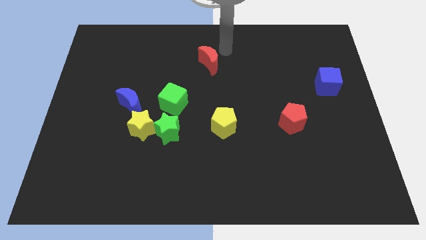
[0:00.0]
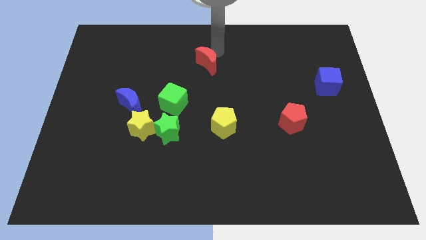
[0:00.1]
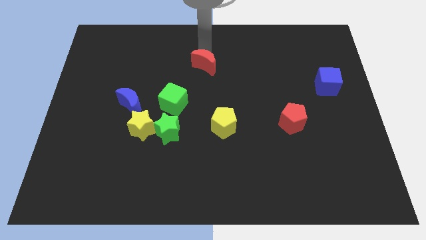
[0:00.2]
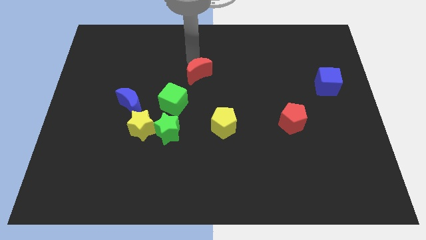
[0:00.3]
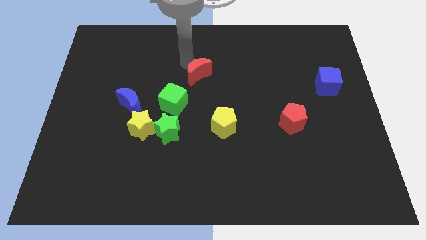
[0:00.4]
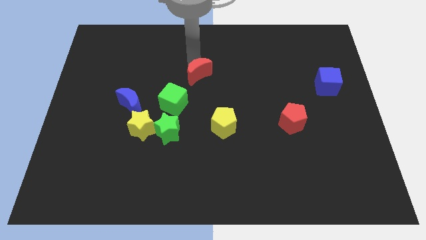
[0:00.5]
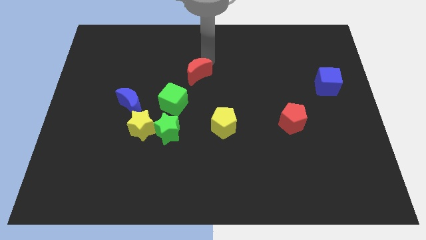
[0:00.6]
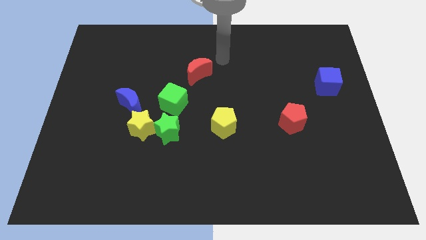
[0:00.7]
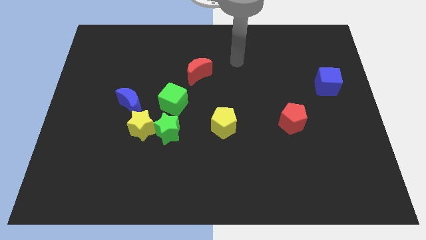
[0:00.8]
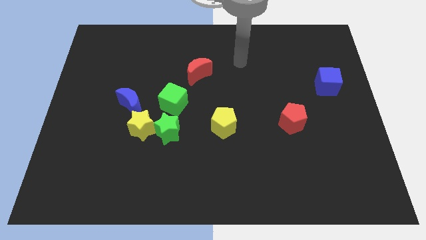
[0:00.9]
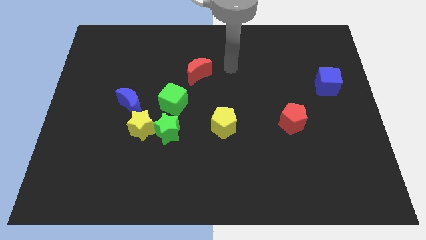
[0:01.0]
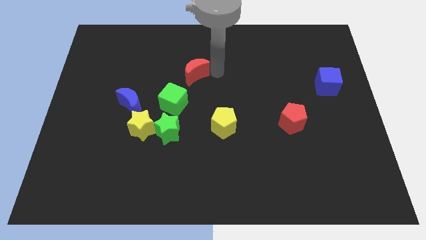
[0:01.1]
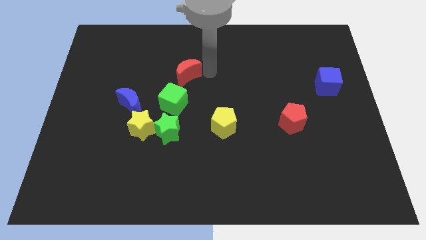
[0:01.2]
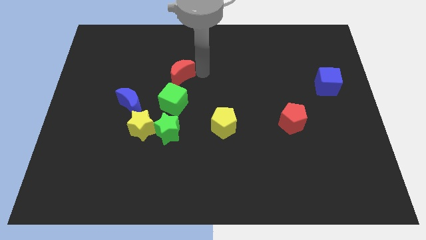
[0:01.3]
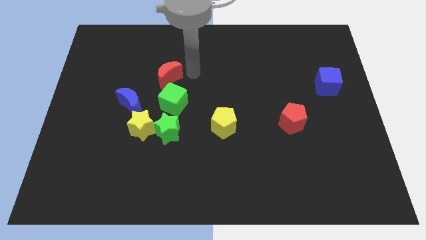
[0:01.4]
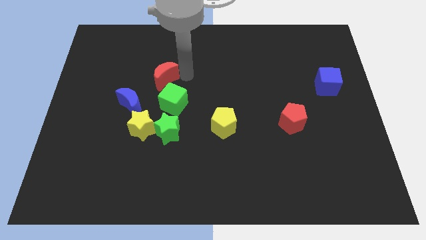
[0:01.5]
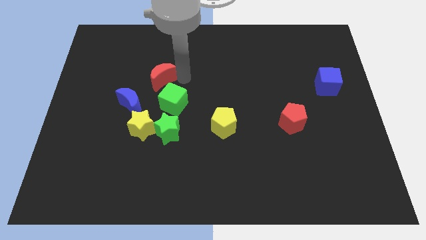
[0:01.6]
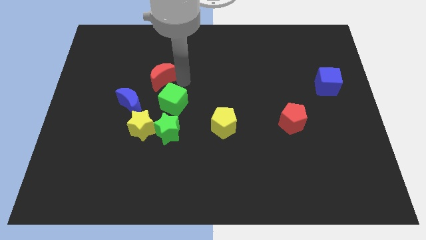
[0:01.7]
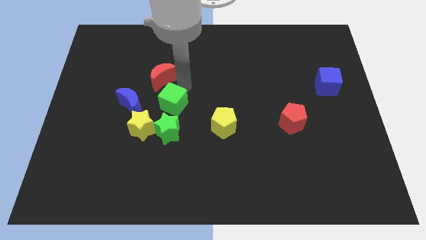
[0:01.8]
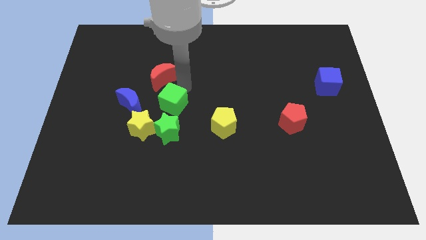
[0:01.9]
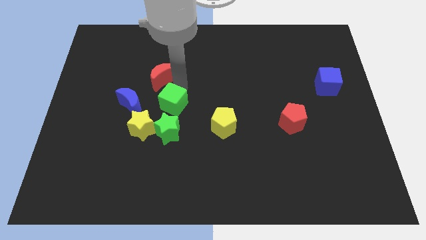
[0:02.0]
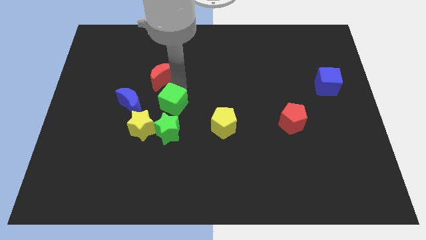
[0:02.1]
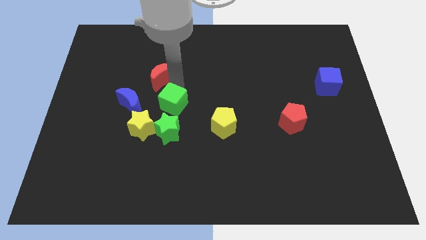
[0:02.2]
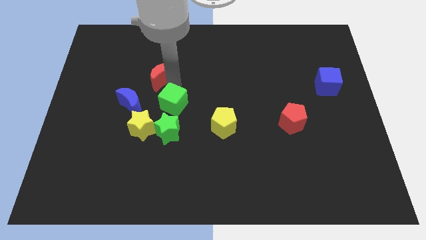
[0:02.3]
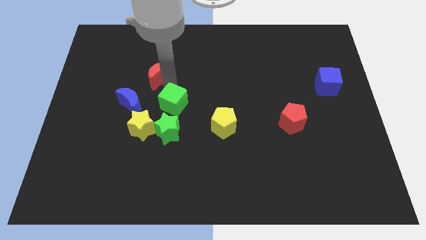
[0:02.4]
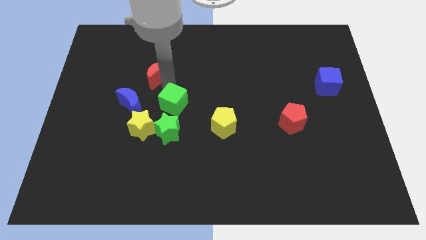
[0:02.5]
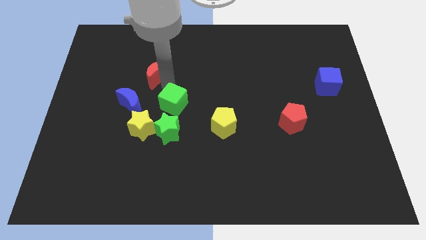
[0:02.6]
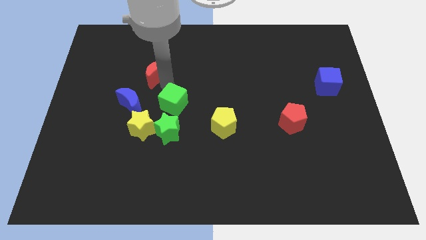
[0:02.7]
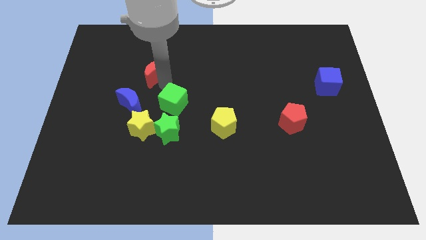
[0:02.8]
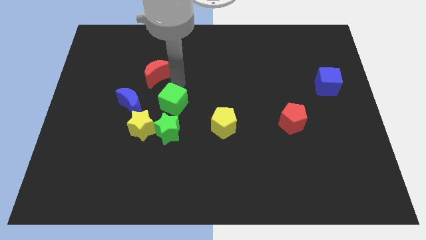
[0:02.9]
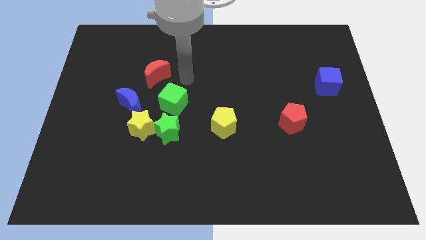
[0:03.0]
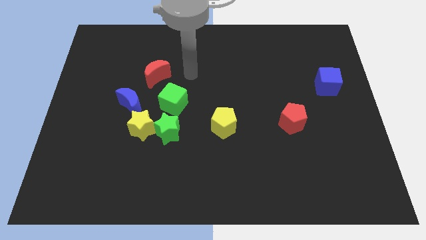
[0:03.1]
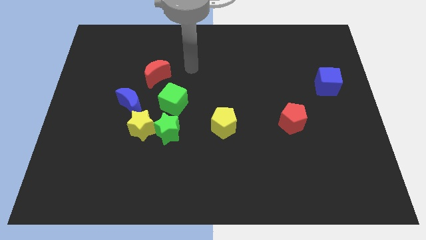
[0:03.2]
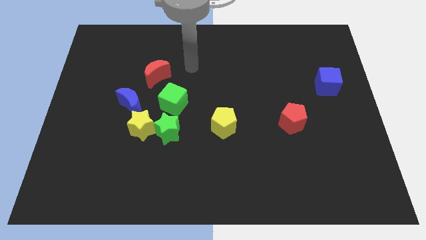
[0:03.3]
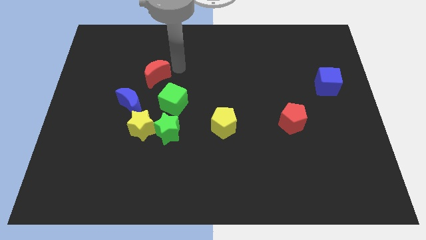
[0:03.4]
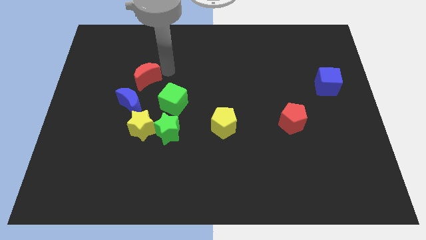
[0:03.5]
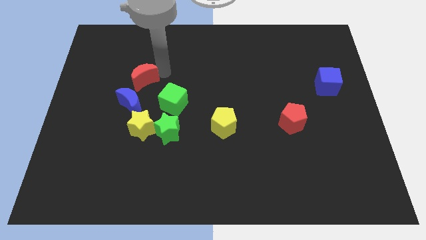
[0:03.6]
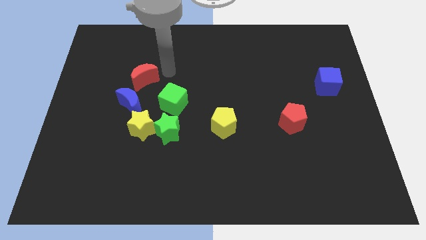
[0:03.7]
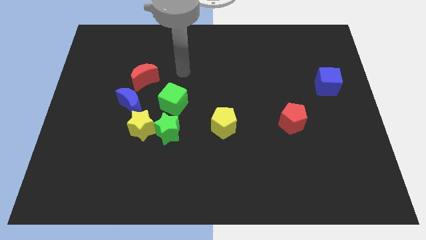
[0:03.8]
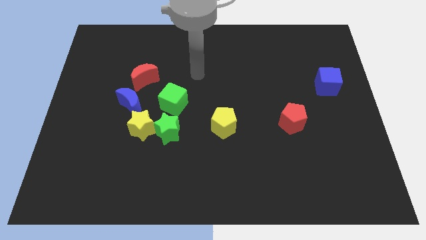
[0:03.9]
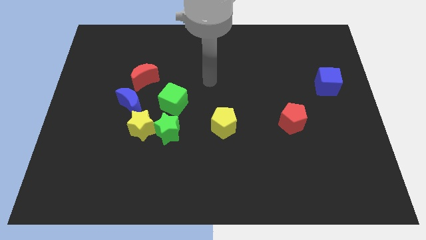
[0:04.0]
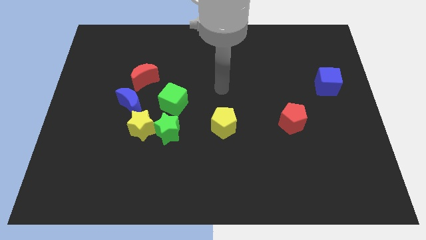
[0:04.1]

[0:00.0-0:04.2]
place the red moon at the top of blue moon

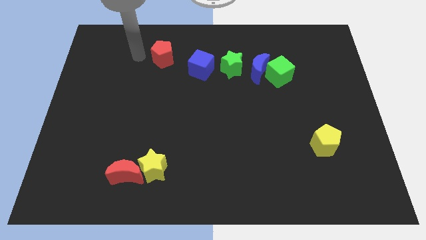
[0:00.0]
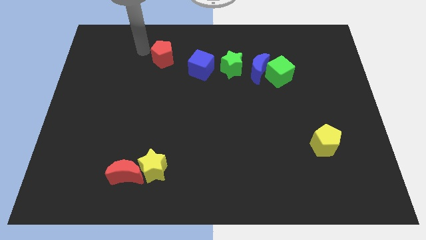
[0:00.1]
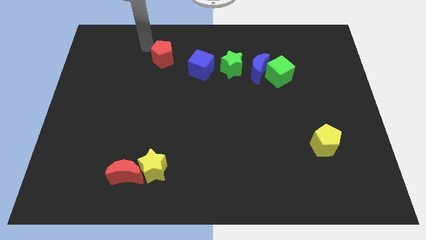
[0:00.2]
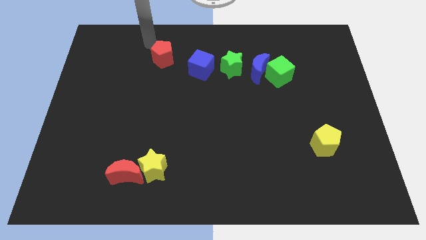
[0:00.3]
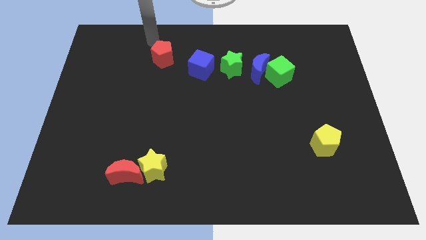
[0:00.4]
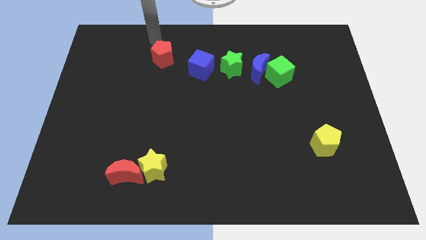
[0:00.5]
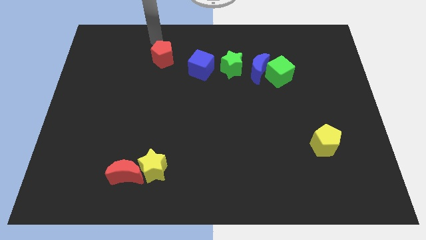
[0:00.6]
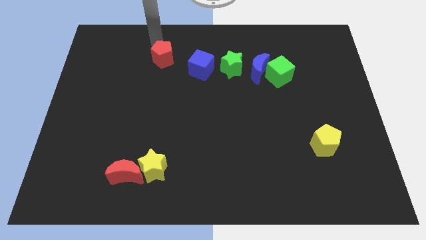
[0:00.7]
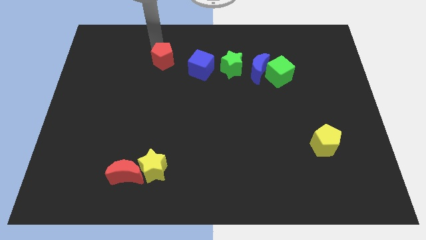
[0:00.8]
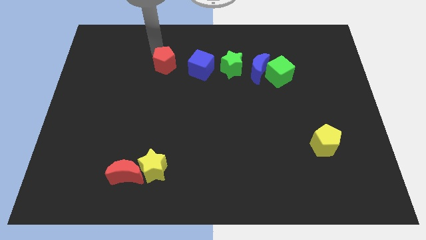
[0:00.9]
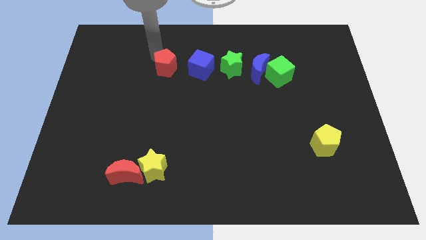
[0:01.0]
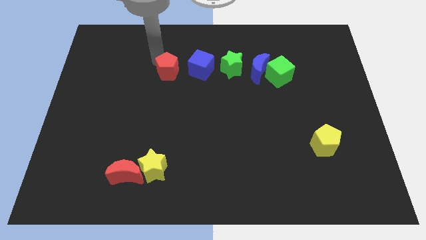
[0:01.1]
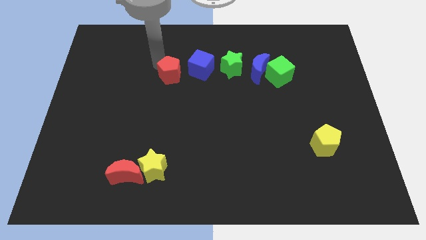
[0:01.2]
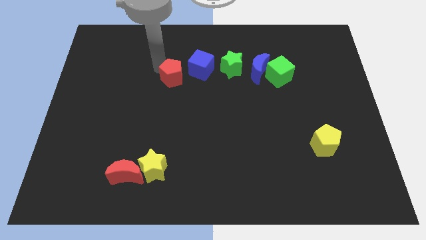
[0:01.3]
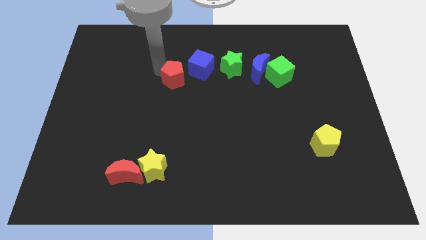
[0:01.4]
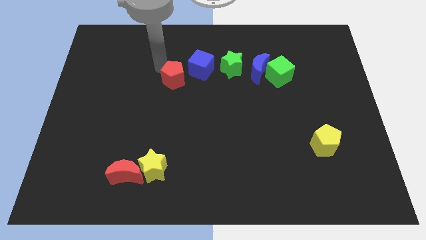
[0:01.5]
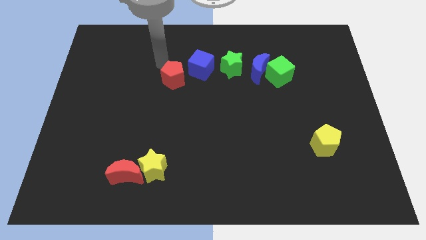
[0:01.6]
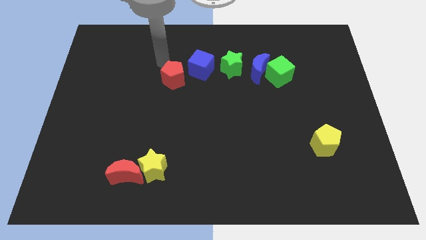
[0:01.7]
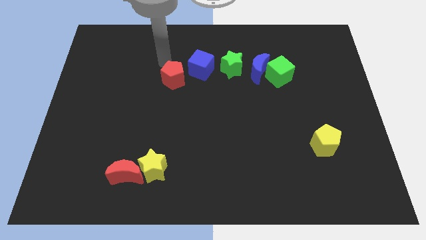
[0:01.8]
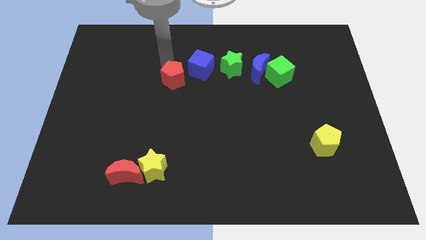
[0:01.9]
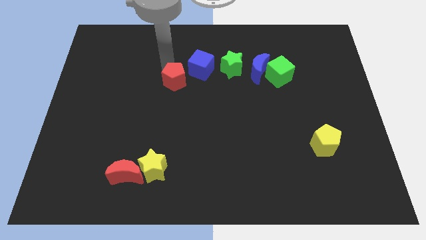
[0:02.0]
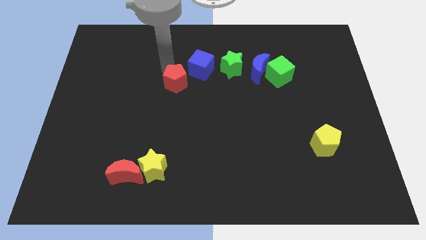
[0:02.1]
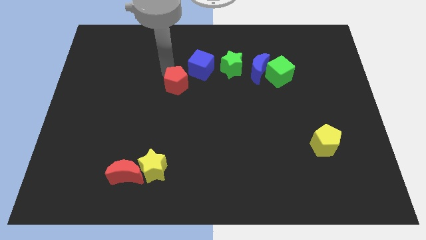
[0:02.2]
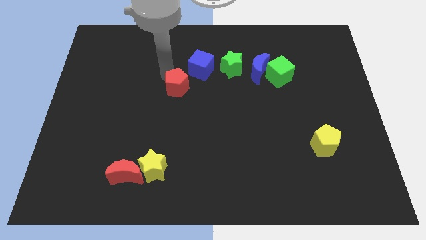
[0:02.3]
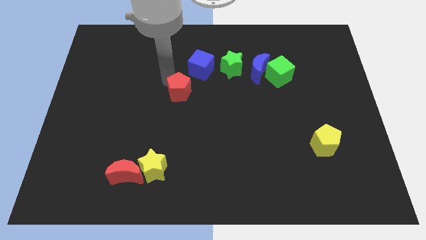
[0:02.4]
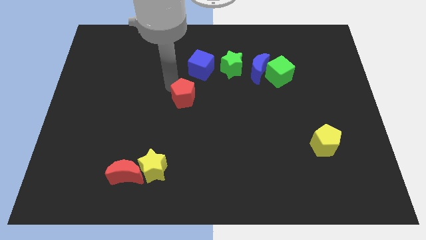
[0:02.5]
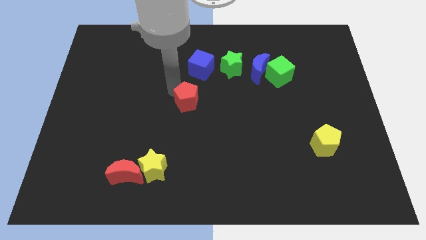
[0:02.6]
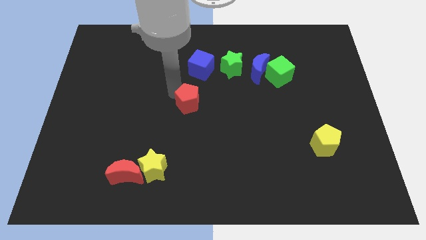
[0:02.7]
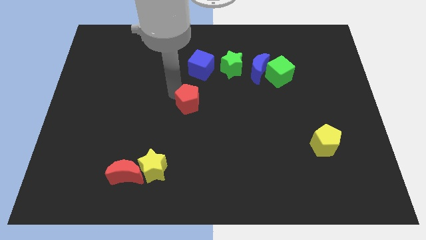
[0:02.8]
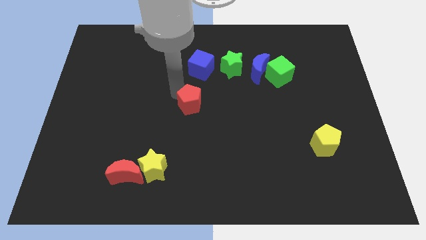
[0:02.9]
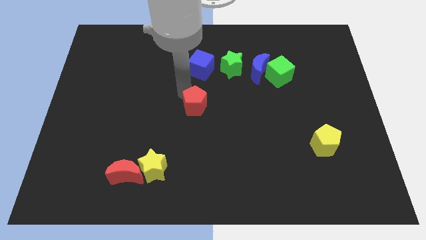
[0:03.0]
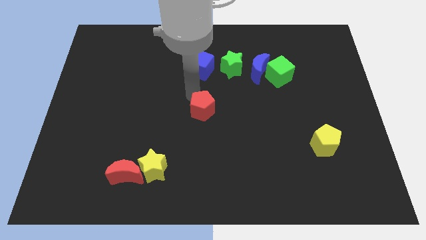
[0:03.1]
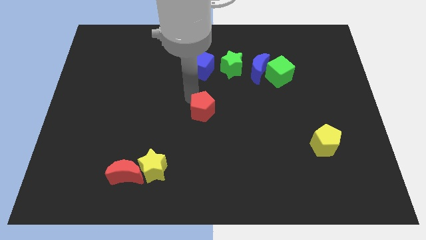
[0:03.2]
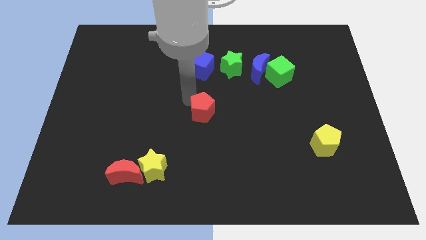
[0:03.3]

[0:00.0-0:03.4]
place the red pentagon vertically below the blue cube

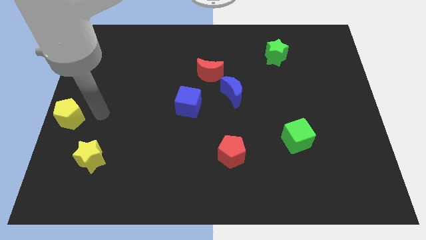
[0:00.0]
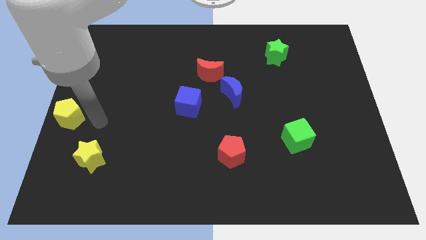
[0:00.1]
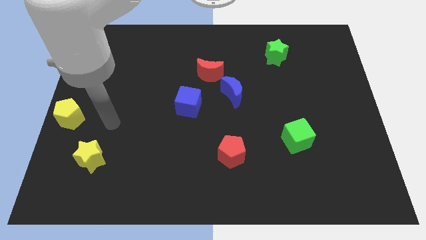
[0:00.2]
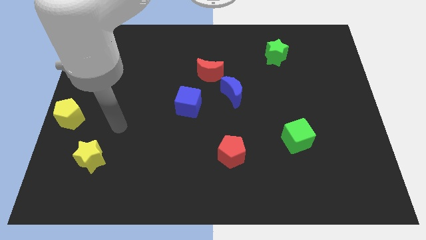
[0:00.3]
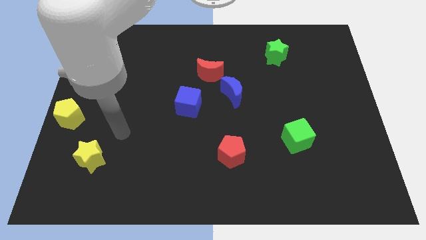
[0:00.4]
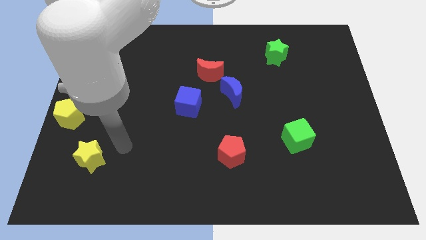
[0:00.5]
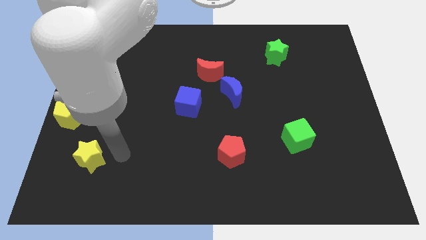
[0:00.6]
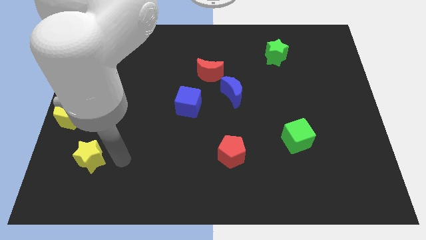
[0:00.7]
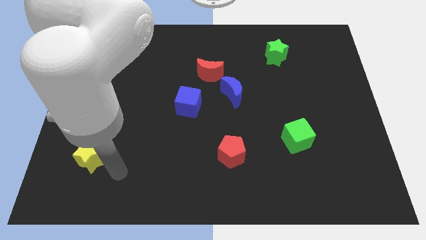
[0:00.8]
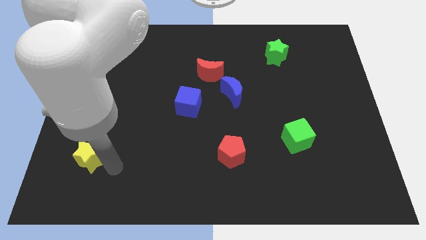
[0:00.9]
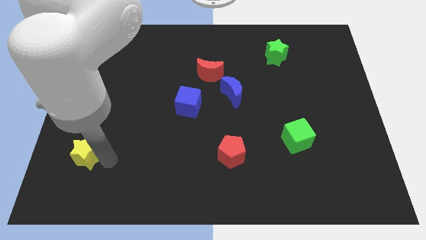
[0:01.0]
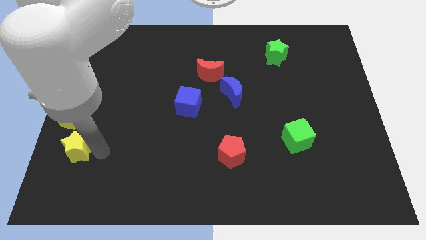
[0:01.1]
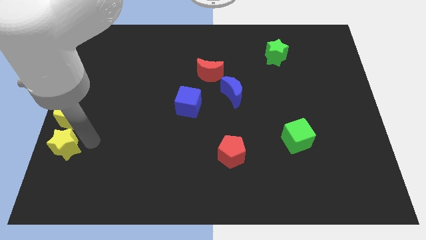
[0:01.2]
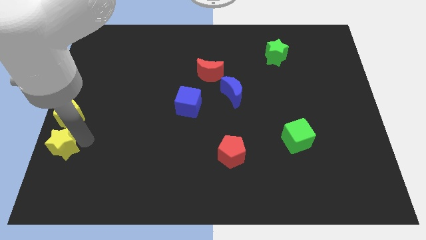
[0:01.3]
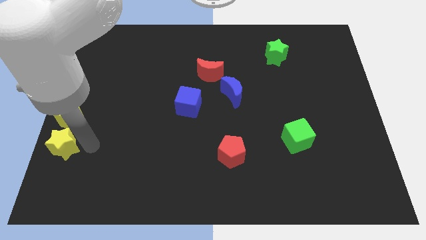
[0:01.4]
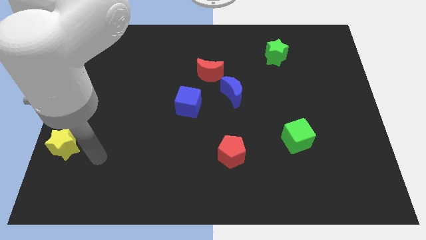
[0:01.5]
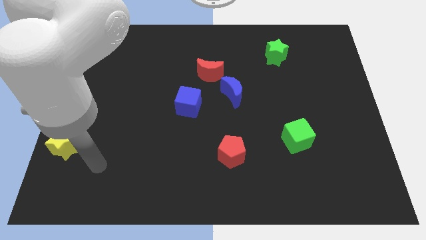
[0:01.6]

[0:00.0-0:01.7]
place the yellow star below the yellow pentagon
